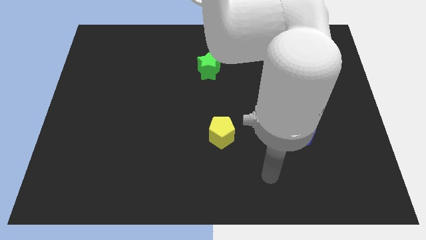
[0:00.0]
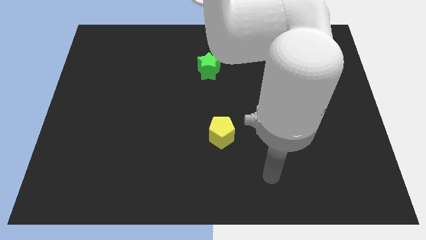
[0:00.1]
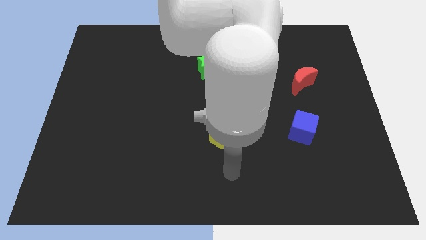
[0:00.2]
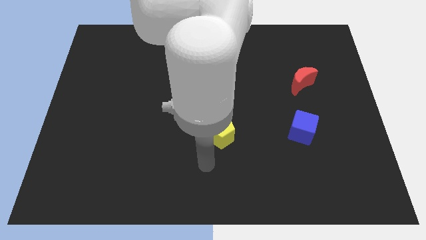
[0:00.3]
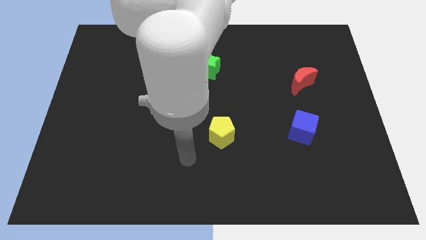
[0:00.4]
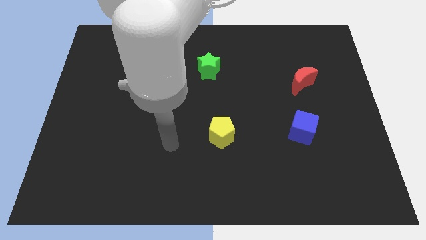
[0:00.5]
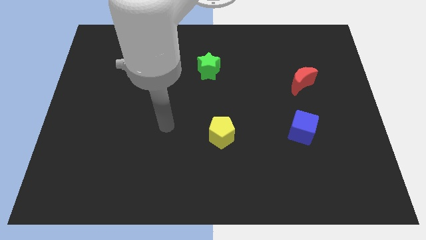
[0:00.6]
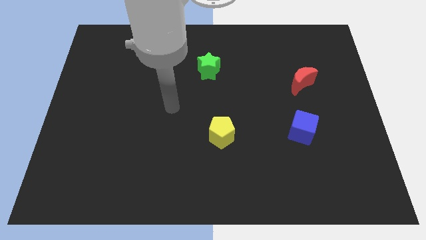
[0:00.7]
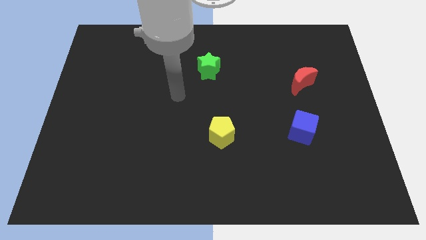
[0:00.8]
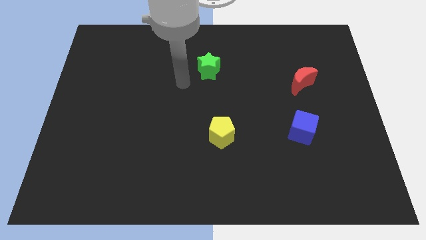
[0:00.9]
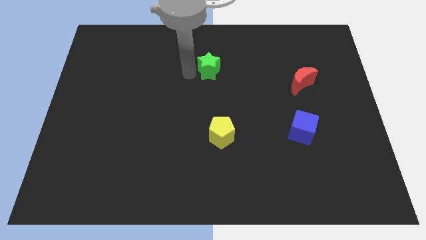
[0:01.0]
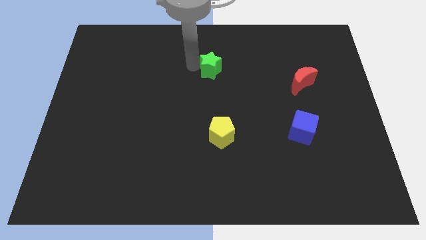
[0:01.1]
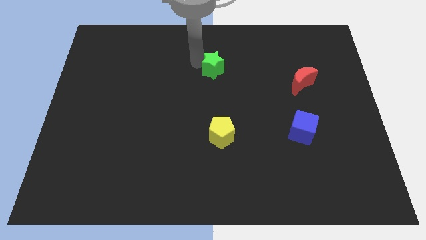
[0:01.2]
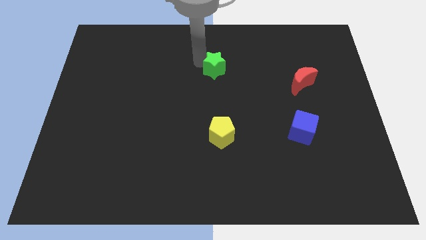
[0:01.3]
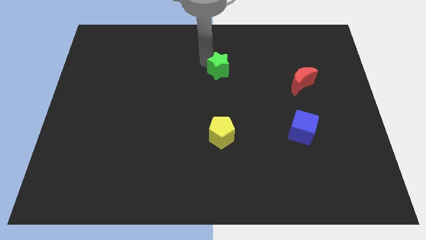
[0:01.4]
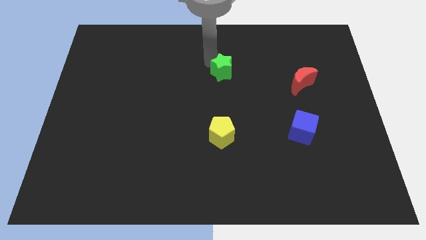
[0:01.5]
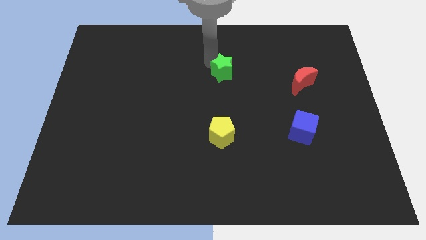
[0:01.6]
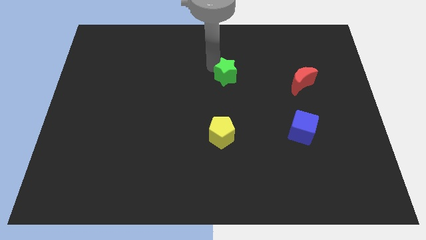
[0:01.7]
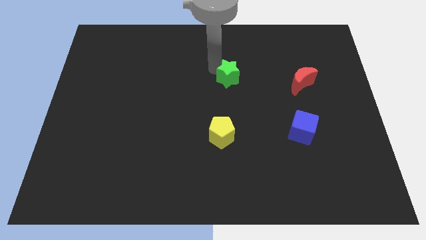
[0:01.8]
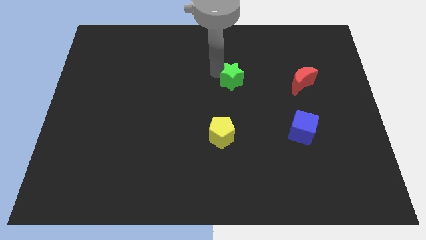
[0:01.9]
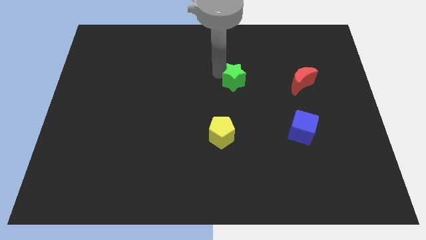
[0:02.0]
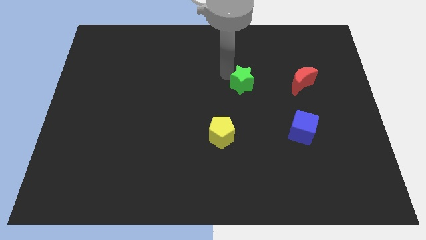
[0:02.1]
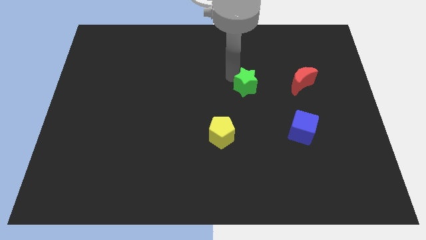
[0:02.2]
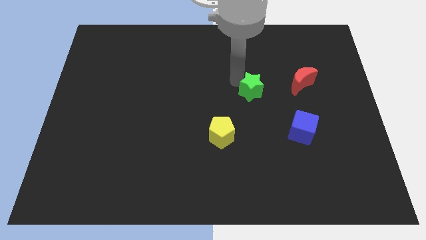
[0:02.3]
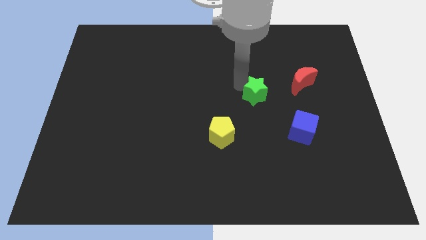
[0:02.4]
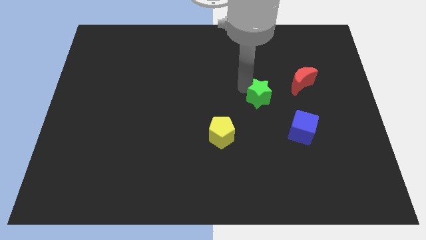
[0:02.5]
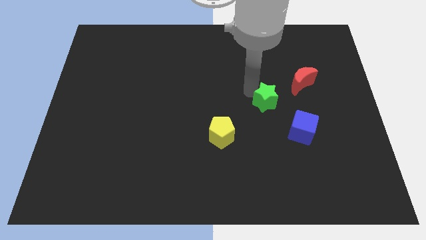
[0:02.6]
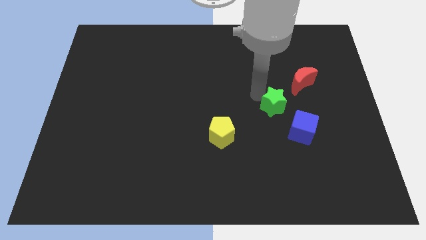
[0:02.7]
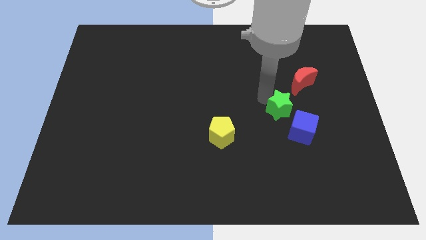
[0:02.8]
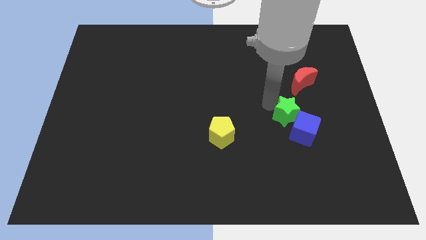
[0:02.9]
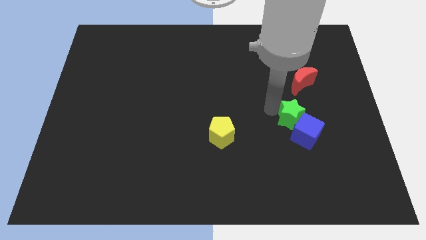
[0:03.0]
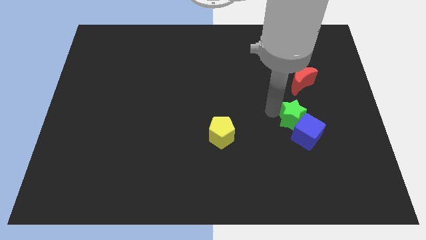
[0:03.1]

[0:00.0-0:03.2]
slide the green star next to the blue cube

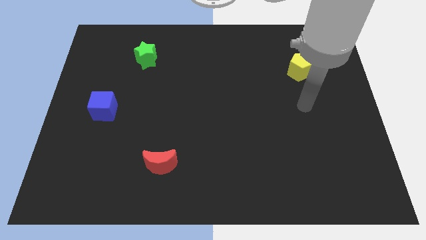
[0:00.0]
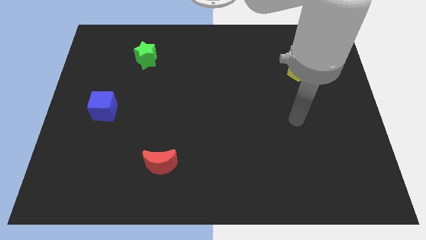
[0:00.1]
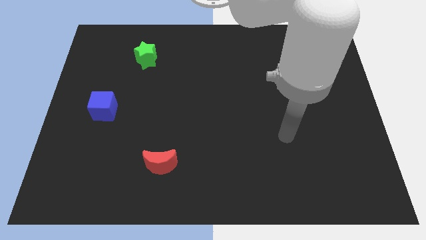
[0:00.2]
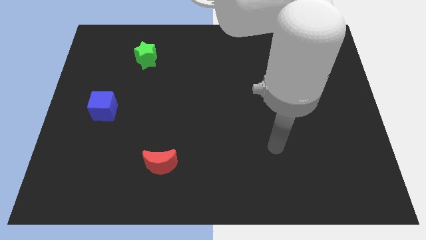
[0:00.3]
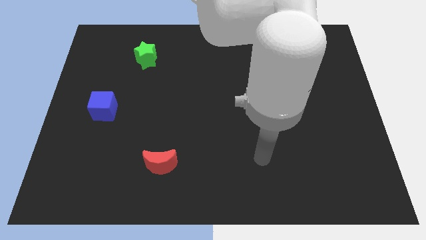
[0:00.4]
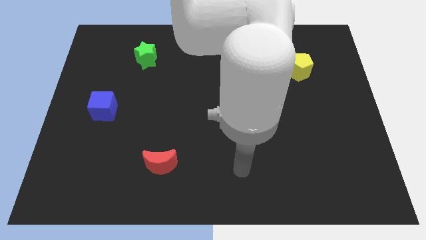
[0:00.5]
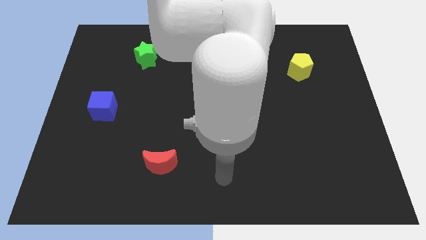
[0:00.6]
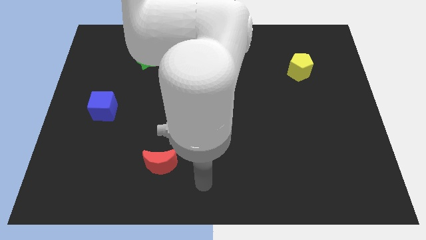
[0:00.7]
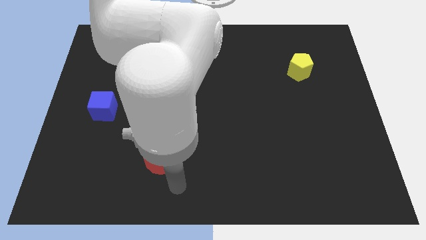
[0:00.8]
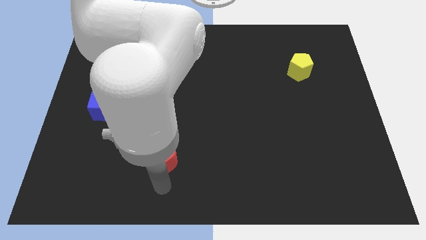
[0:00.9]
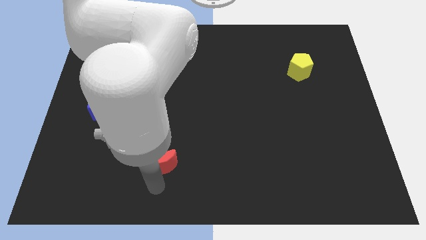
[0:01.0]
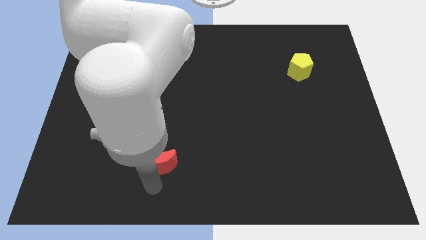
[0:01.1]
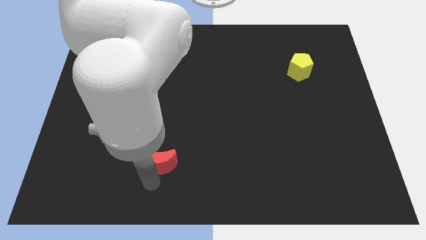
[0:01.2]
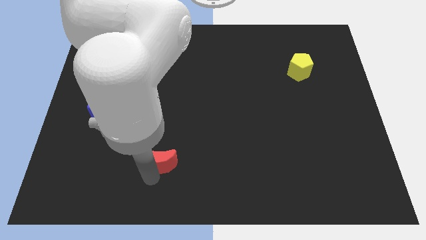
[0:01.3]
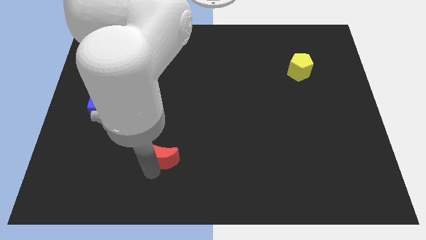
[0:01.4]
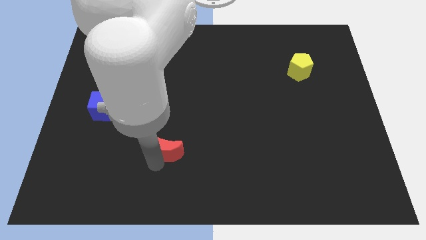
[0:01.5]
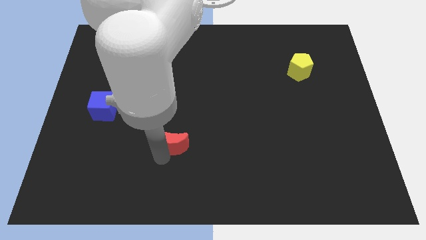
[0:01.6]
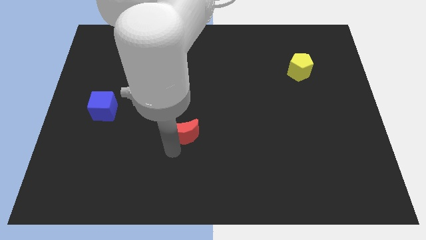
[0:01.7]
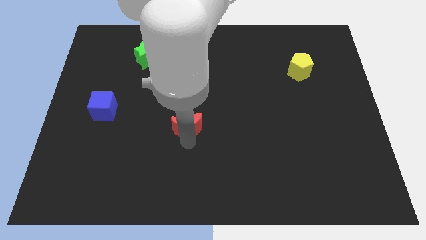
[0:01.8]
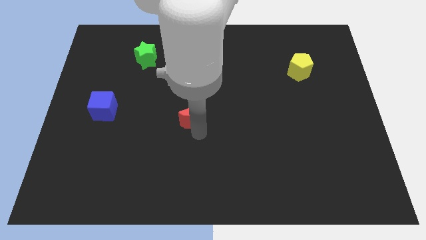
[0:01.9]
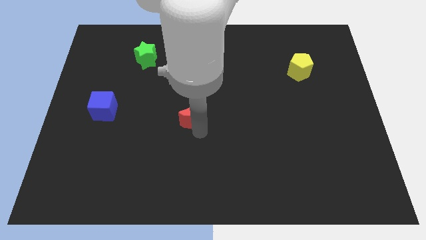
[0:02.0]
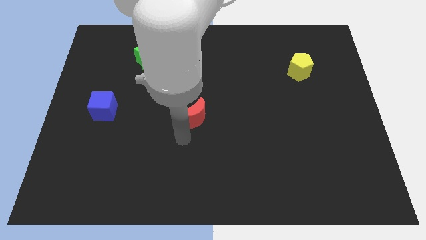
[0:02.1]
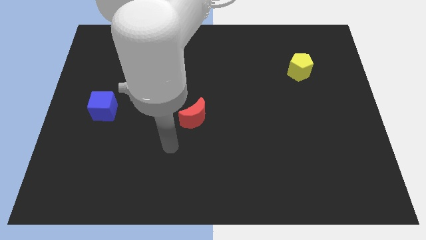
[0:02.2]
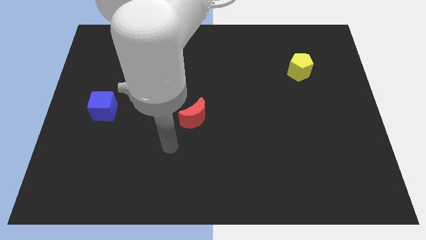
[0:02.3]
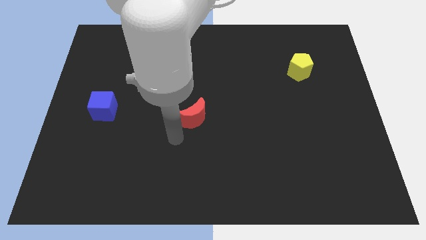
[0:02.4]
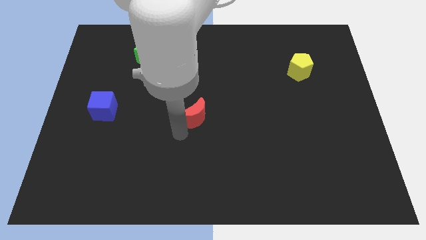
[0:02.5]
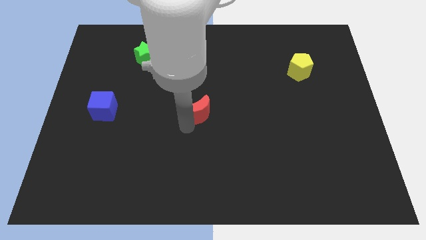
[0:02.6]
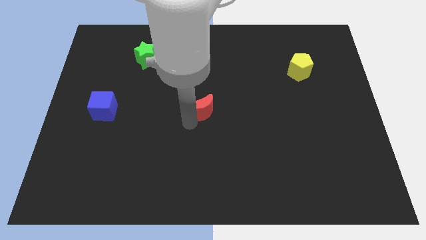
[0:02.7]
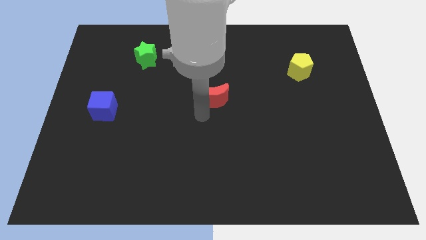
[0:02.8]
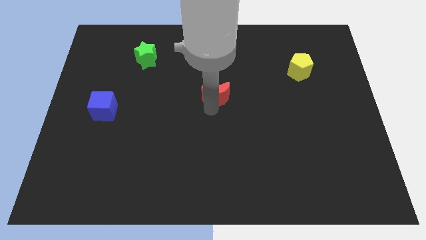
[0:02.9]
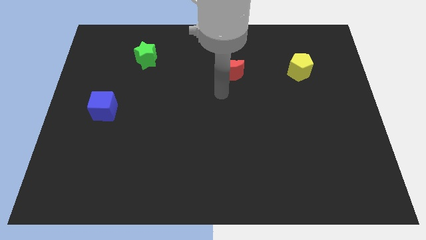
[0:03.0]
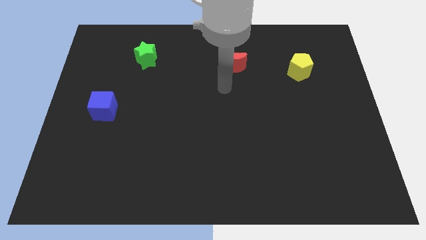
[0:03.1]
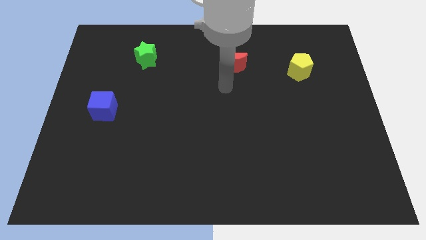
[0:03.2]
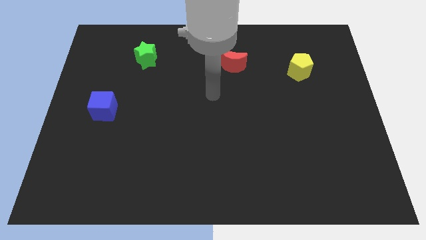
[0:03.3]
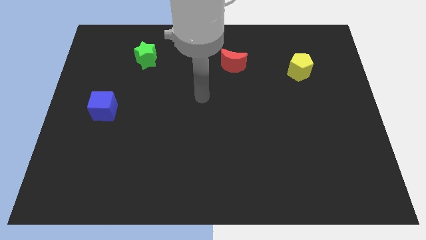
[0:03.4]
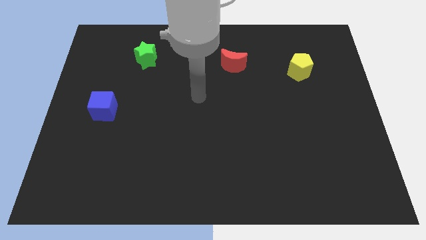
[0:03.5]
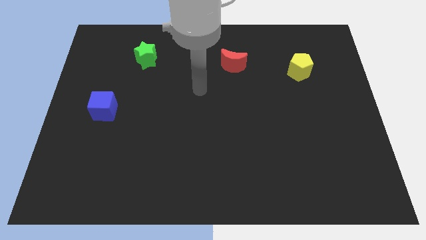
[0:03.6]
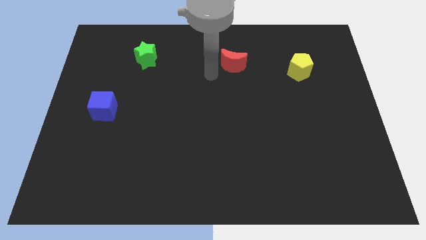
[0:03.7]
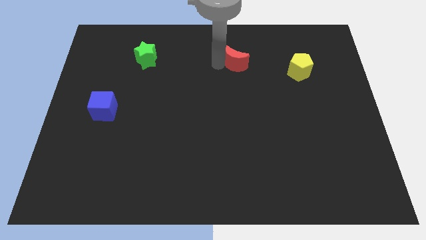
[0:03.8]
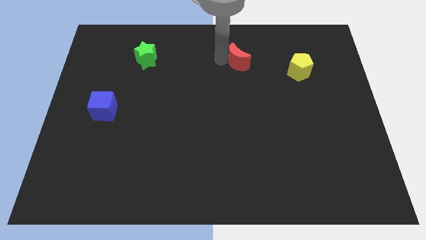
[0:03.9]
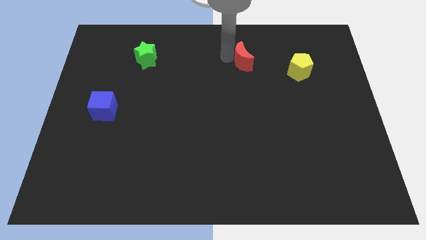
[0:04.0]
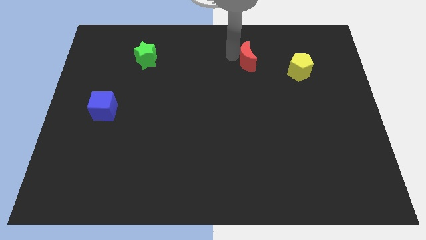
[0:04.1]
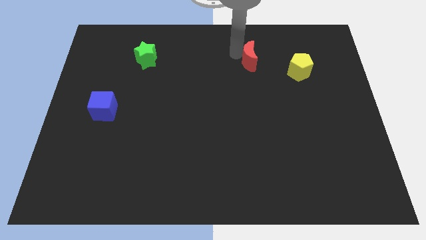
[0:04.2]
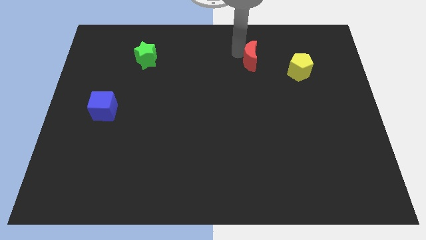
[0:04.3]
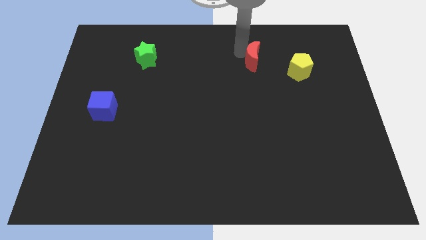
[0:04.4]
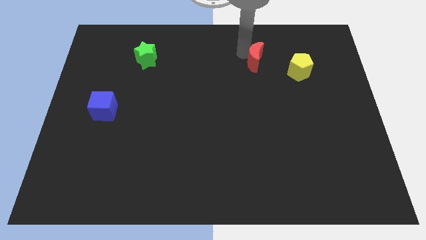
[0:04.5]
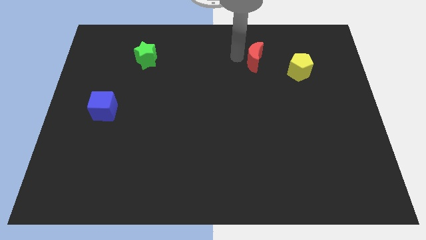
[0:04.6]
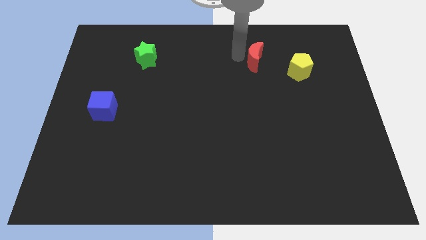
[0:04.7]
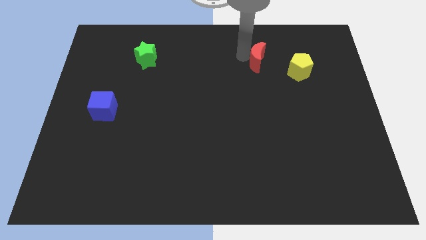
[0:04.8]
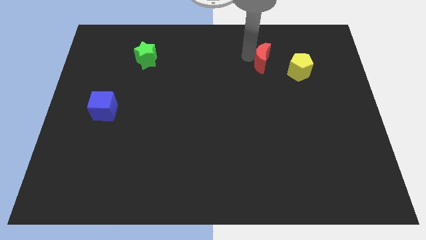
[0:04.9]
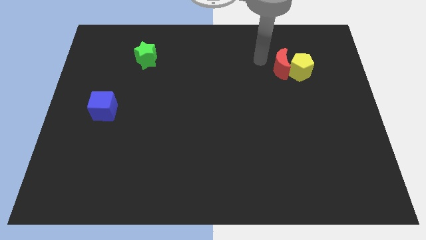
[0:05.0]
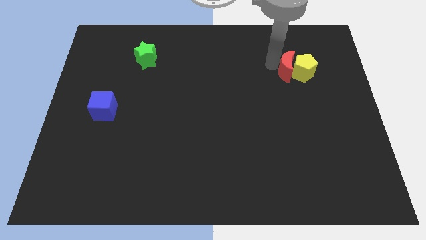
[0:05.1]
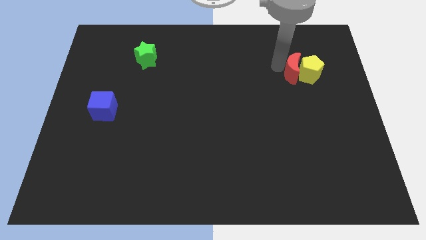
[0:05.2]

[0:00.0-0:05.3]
slide the red moon towards the yellow pentagon
